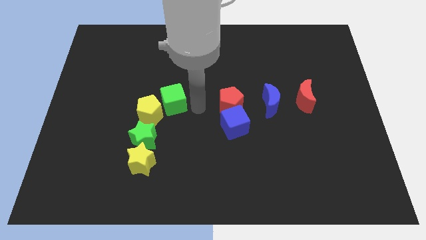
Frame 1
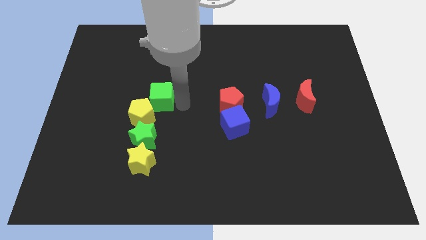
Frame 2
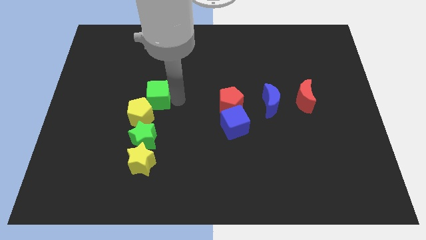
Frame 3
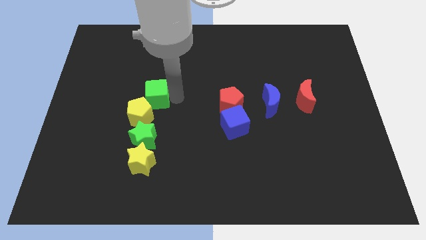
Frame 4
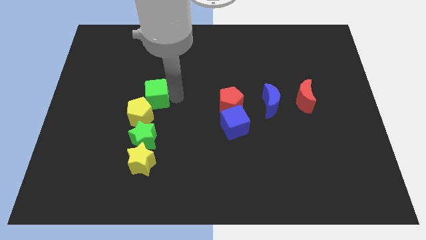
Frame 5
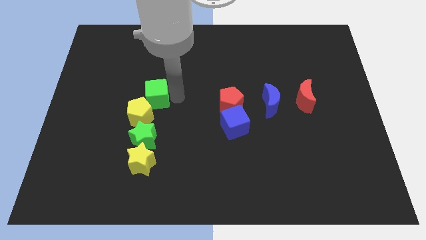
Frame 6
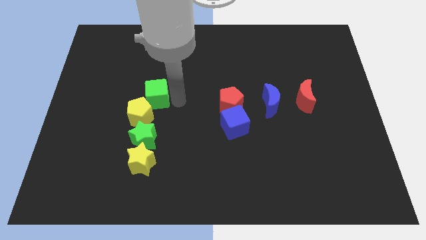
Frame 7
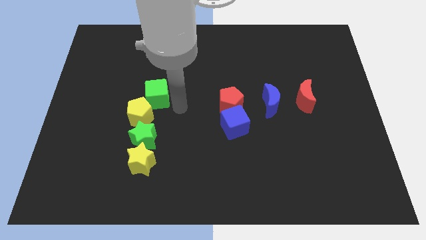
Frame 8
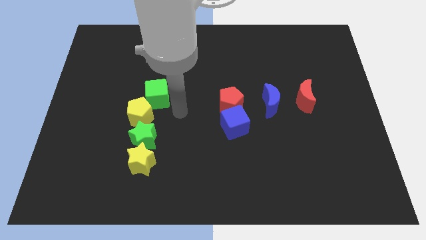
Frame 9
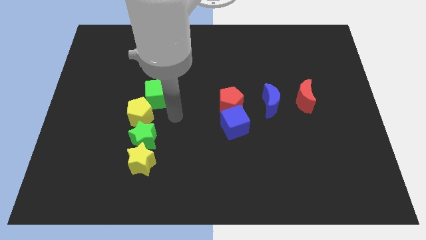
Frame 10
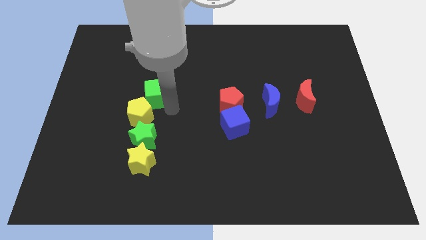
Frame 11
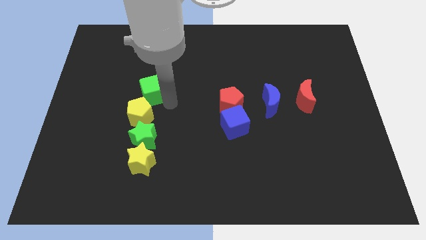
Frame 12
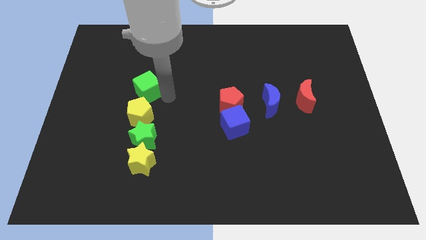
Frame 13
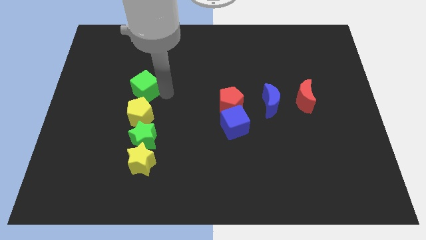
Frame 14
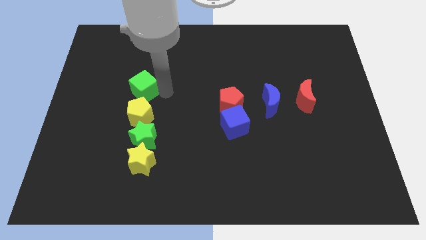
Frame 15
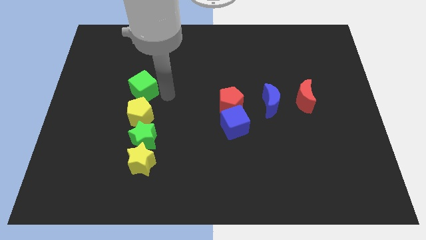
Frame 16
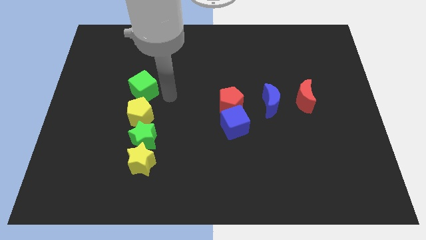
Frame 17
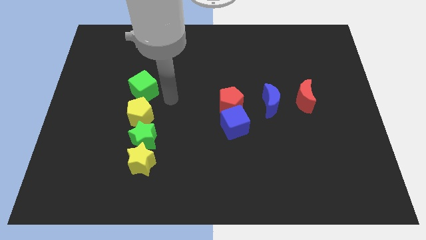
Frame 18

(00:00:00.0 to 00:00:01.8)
slide the green cube vertically above the yellow pentagon

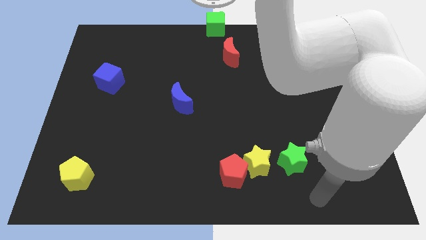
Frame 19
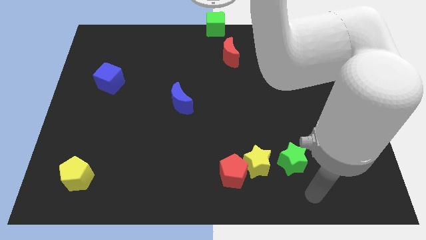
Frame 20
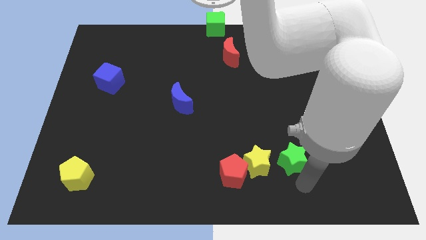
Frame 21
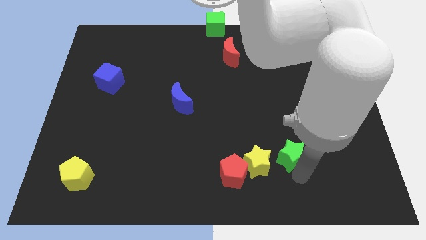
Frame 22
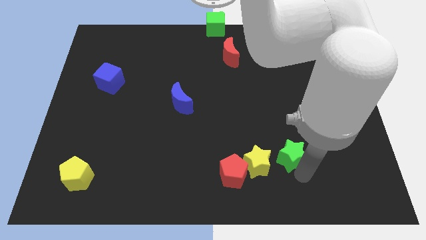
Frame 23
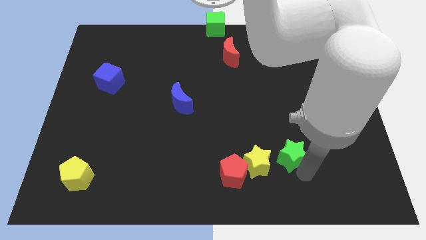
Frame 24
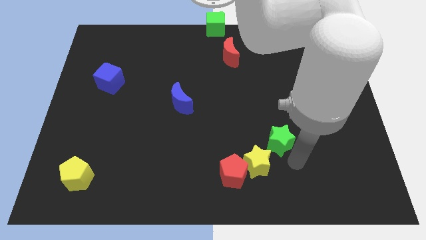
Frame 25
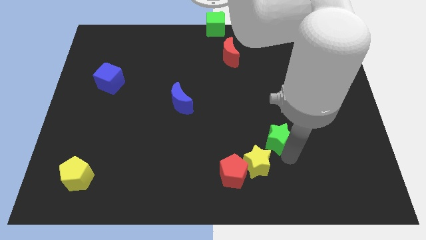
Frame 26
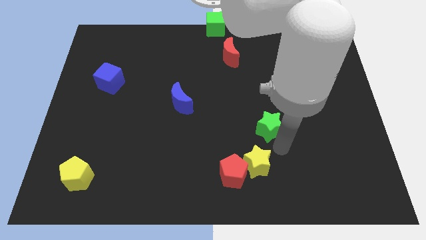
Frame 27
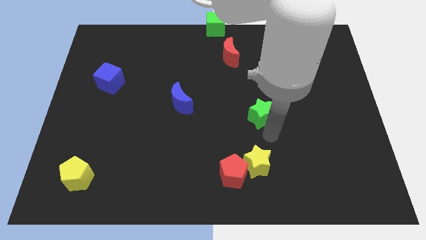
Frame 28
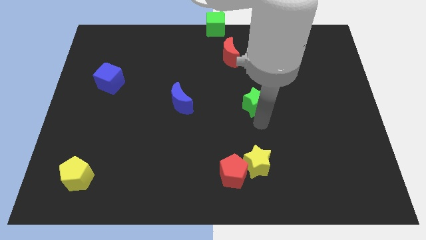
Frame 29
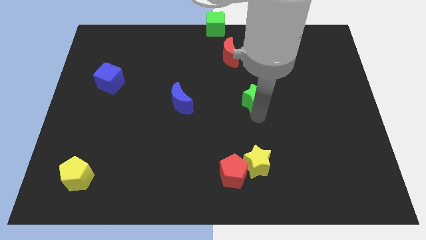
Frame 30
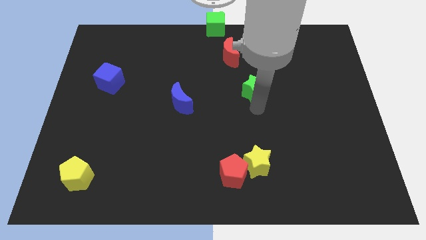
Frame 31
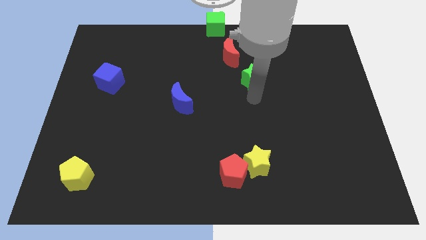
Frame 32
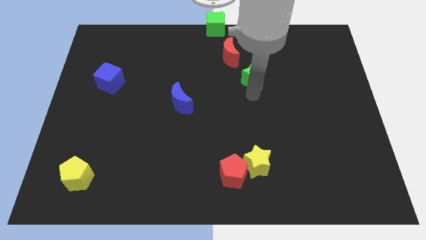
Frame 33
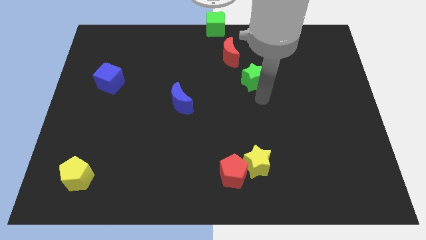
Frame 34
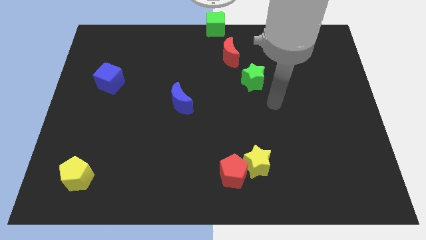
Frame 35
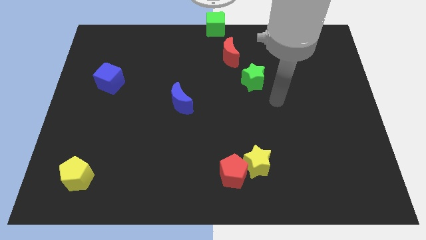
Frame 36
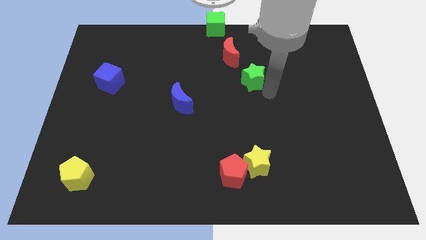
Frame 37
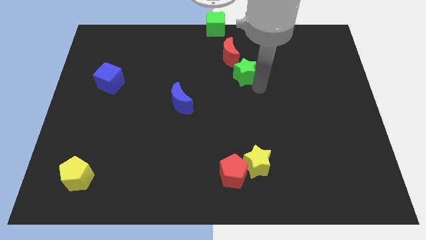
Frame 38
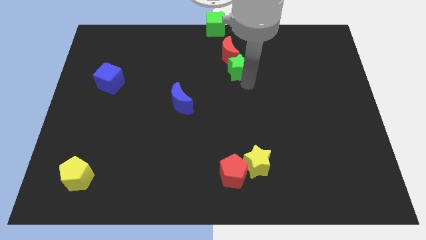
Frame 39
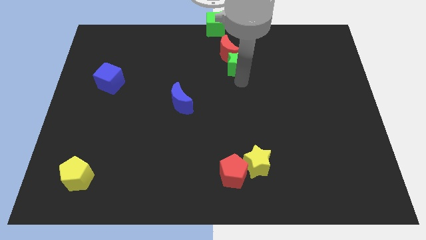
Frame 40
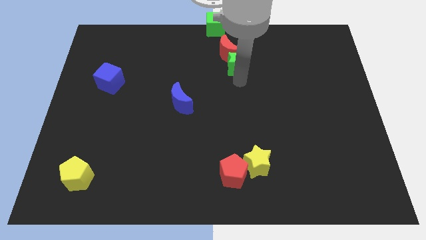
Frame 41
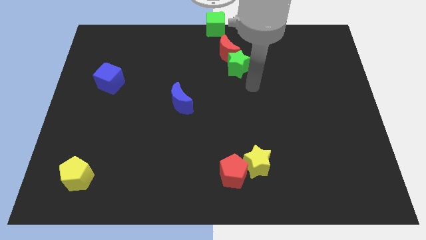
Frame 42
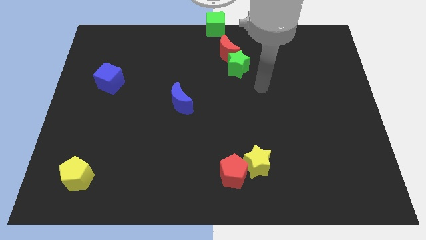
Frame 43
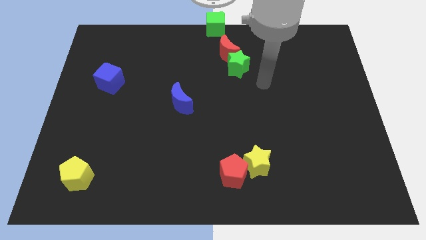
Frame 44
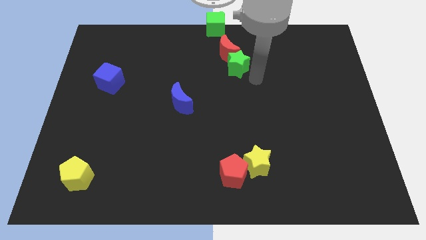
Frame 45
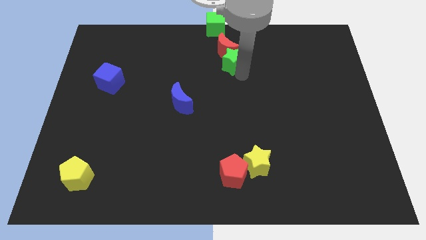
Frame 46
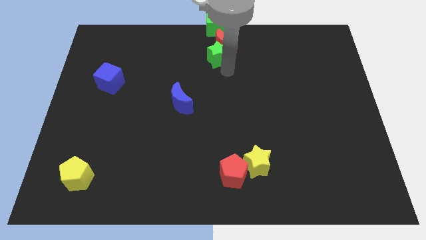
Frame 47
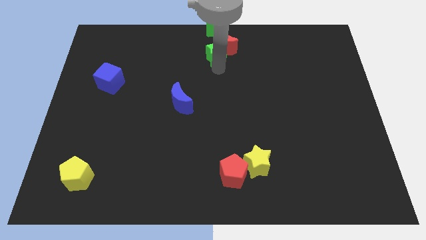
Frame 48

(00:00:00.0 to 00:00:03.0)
push the green star into the red moon

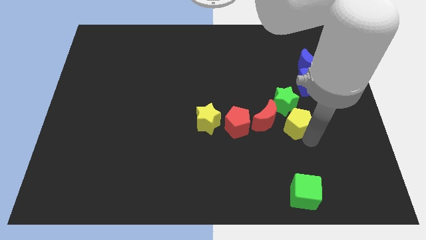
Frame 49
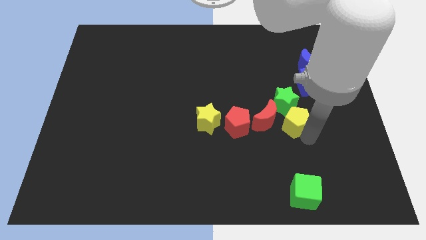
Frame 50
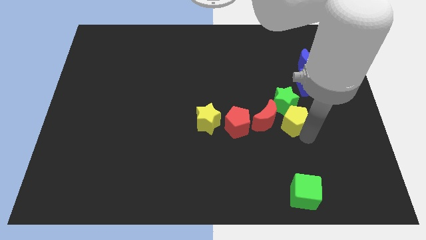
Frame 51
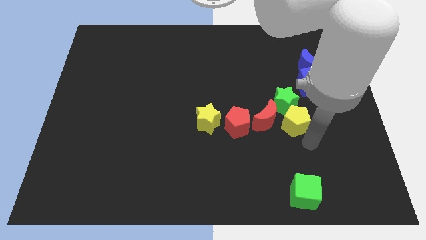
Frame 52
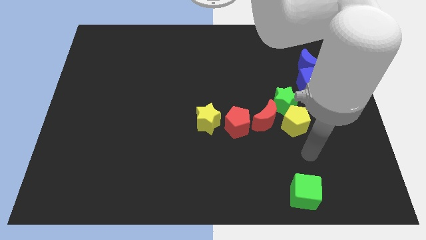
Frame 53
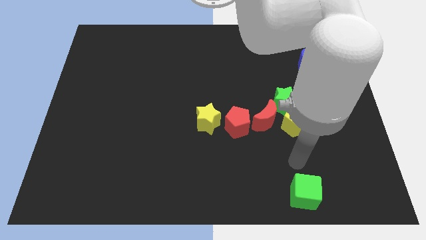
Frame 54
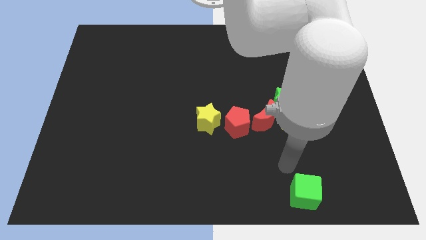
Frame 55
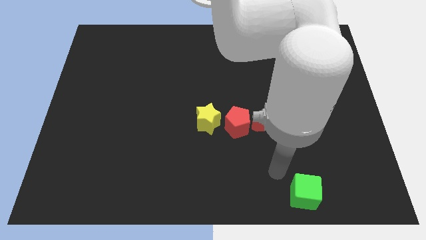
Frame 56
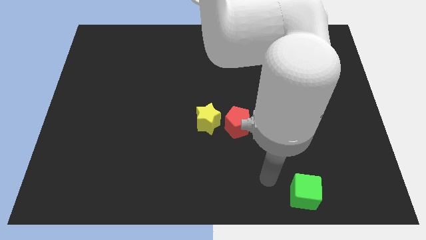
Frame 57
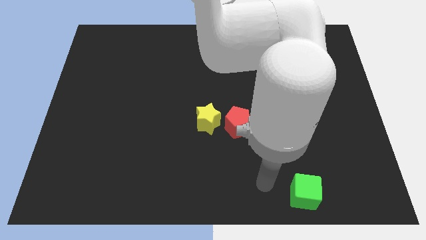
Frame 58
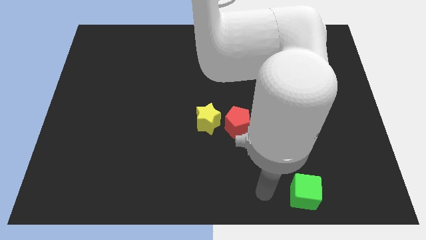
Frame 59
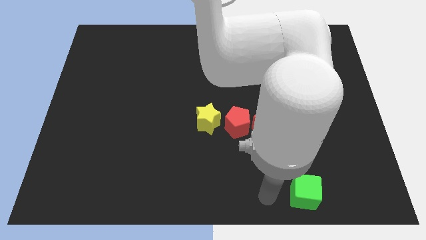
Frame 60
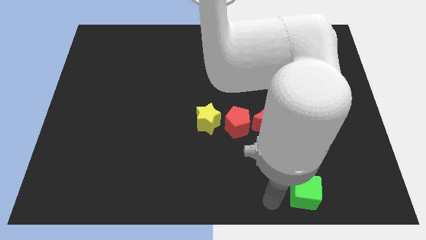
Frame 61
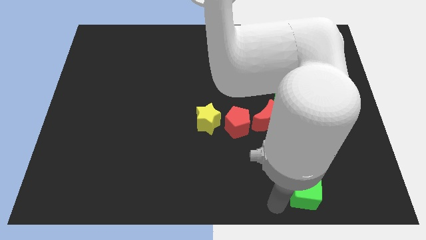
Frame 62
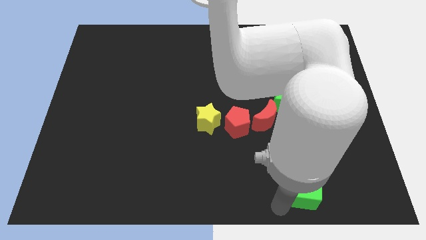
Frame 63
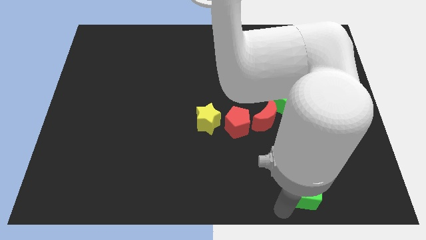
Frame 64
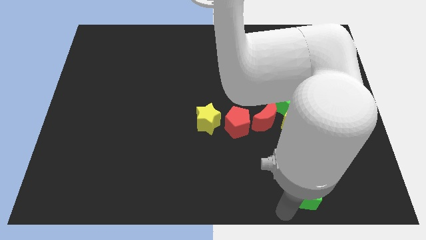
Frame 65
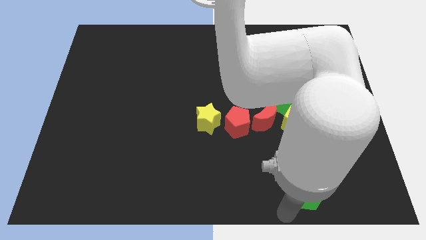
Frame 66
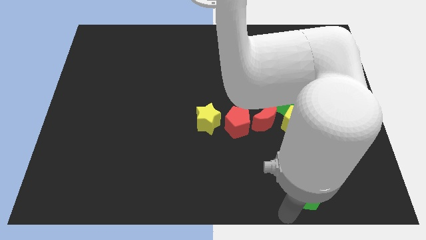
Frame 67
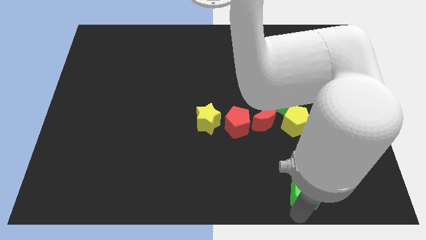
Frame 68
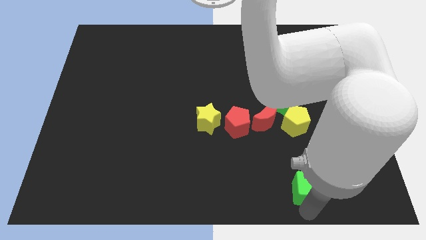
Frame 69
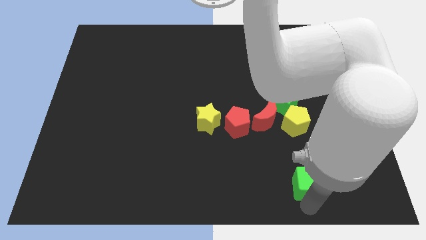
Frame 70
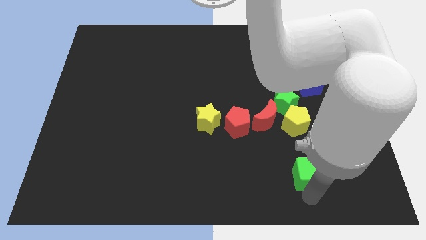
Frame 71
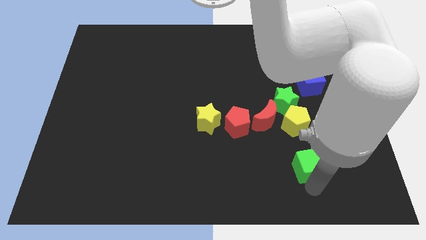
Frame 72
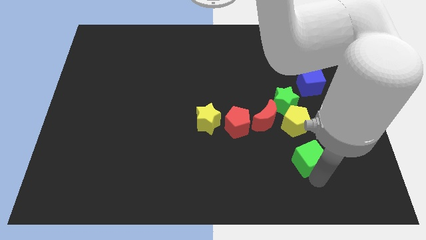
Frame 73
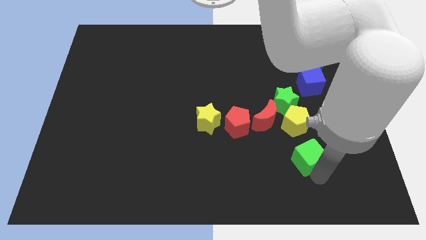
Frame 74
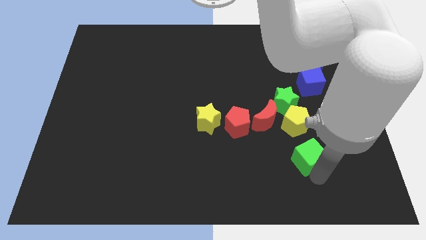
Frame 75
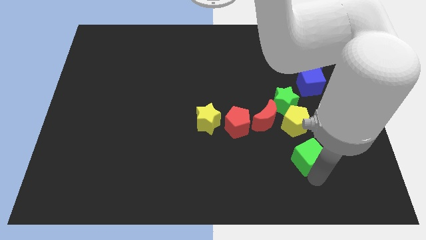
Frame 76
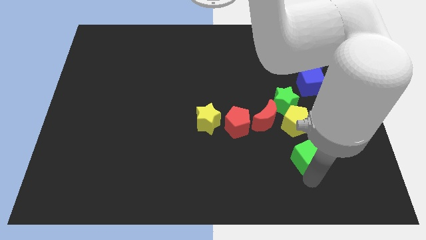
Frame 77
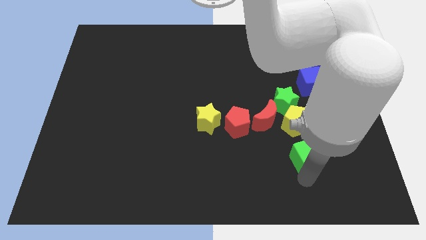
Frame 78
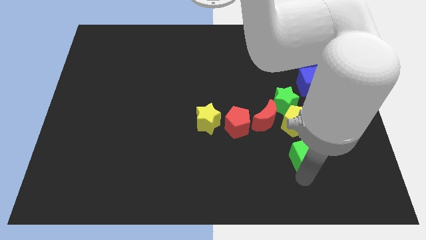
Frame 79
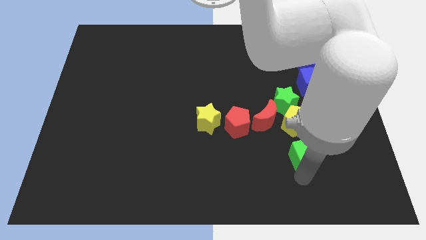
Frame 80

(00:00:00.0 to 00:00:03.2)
push green cube towards yellow pentagon

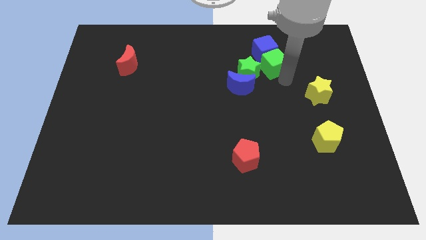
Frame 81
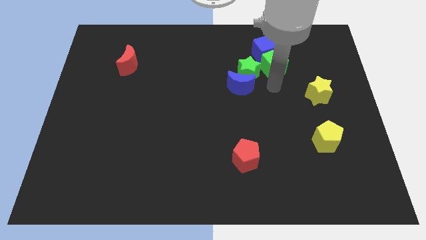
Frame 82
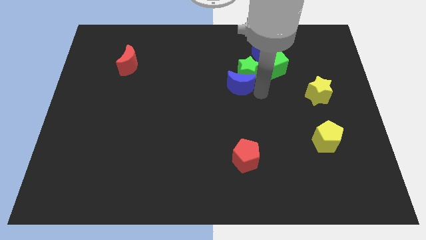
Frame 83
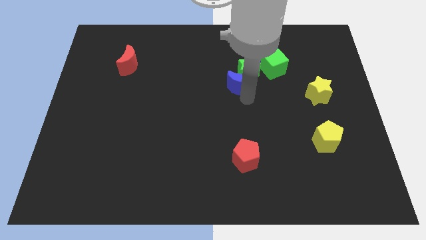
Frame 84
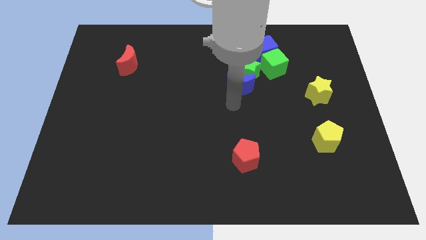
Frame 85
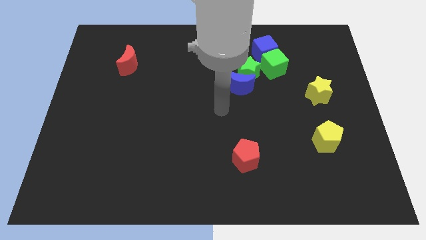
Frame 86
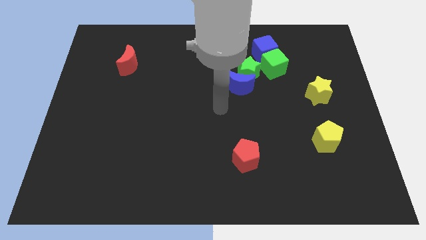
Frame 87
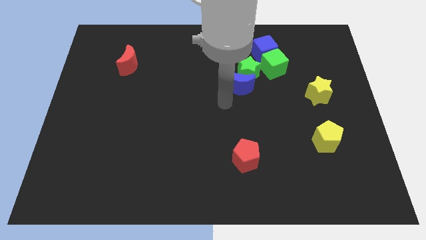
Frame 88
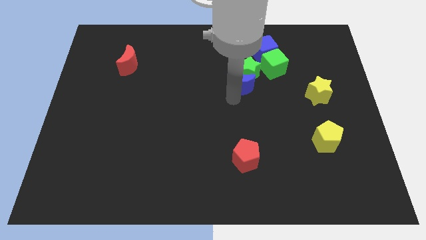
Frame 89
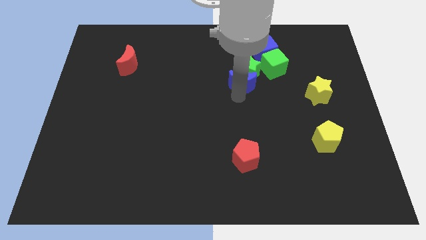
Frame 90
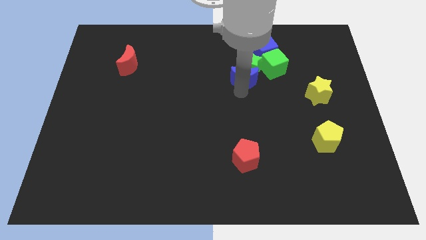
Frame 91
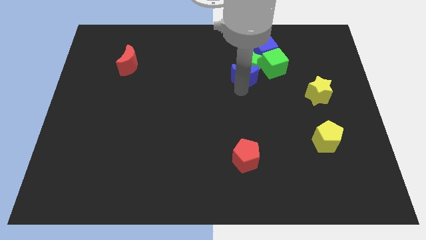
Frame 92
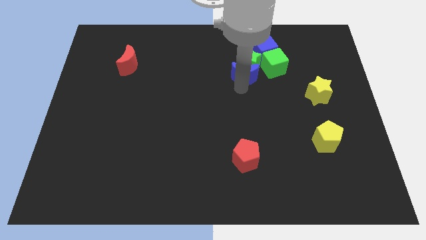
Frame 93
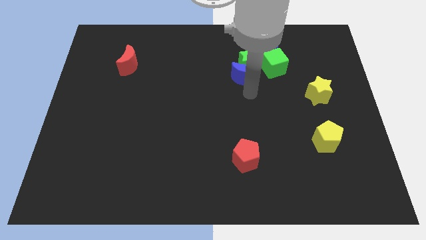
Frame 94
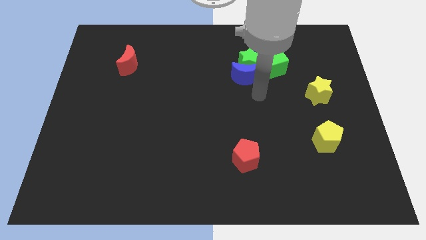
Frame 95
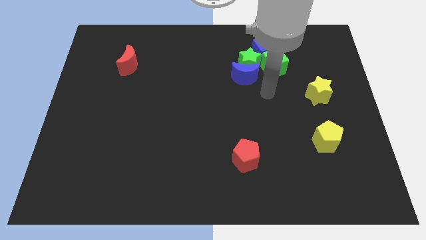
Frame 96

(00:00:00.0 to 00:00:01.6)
move blue moon into green star
